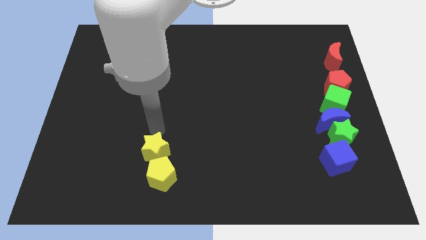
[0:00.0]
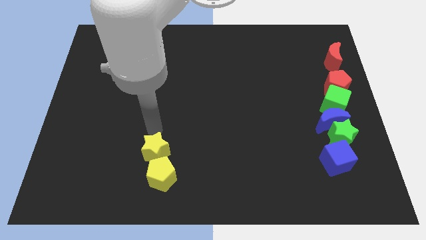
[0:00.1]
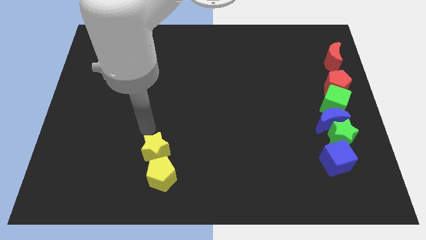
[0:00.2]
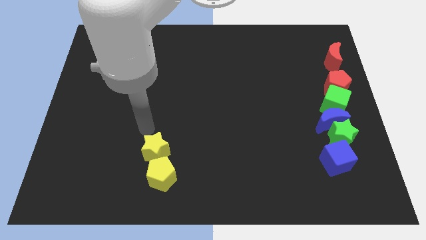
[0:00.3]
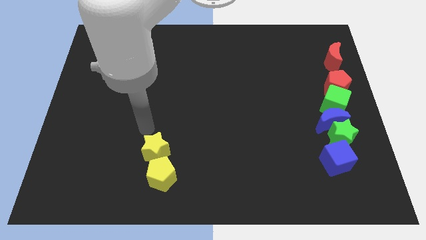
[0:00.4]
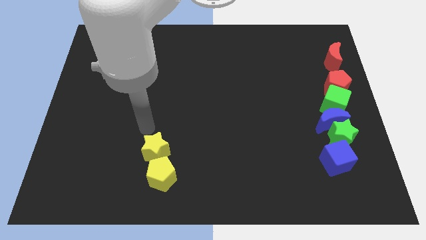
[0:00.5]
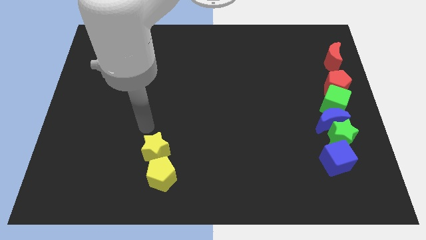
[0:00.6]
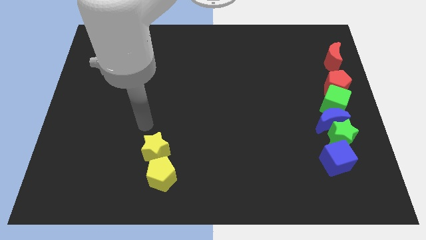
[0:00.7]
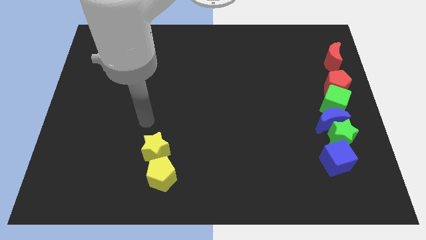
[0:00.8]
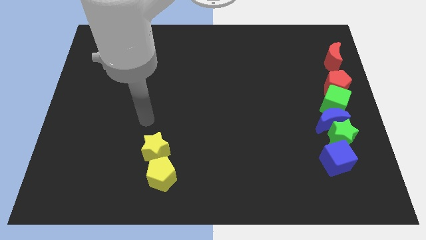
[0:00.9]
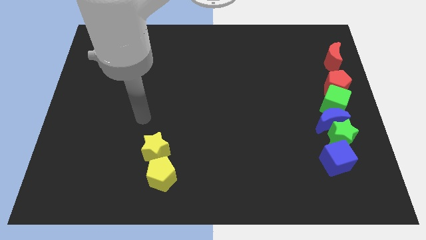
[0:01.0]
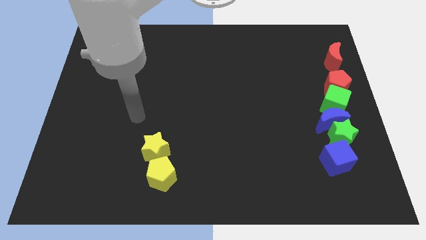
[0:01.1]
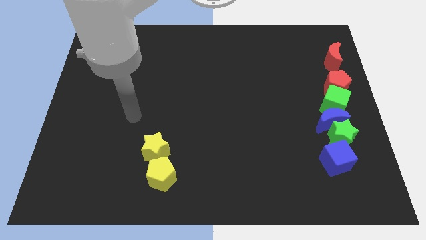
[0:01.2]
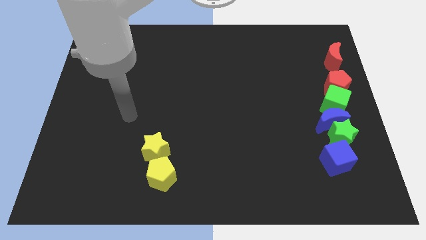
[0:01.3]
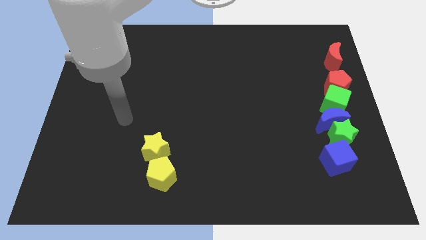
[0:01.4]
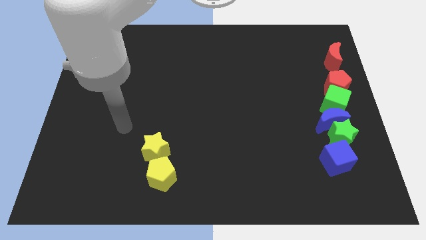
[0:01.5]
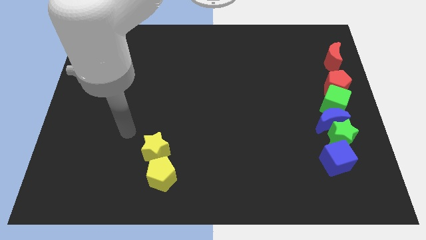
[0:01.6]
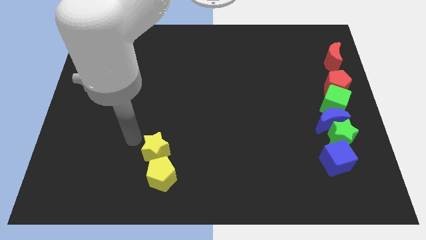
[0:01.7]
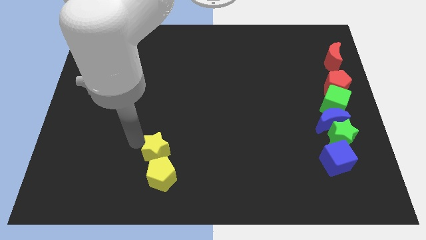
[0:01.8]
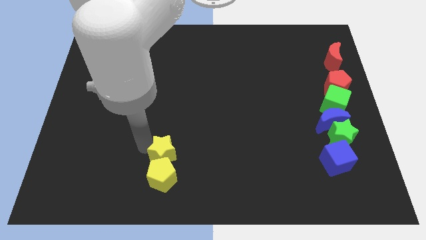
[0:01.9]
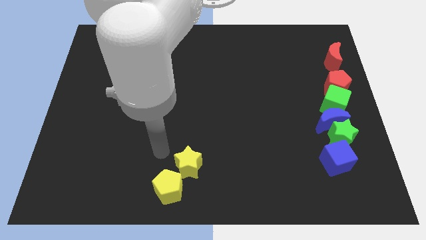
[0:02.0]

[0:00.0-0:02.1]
push the yellow blocks towards the bottom centre of the board

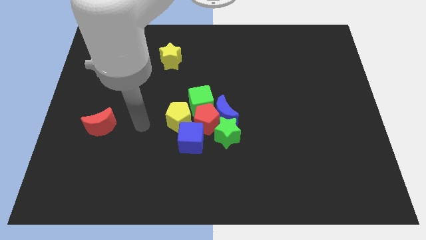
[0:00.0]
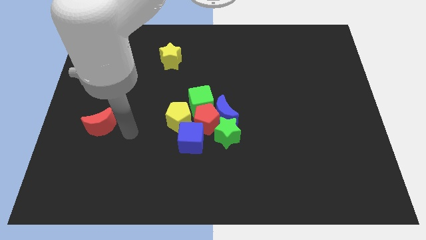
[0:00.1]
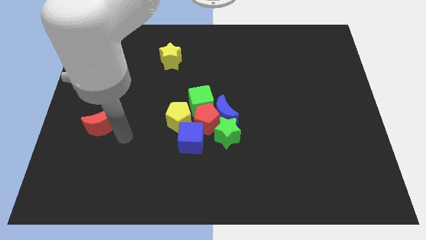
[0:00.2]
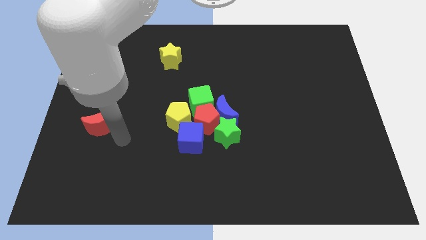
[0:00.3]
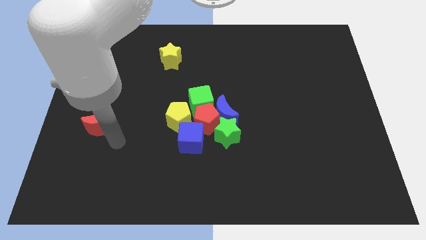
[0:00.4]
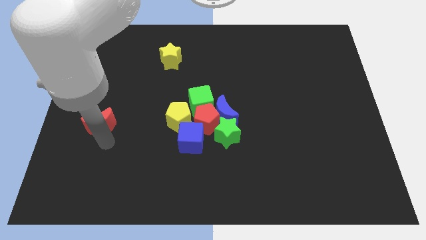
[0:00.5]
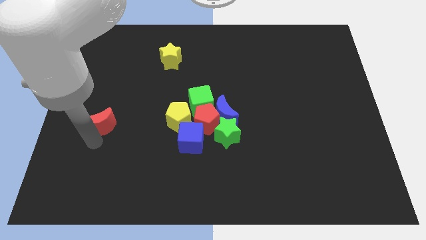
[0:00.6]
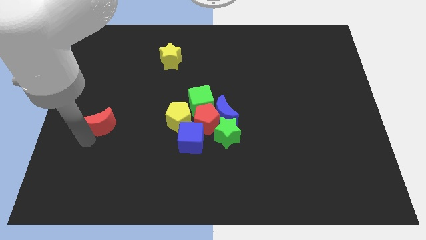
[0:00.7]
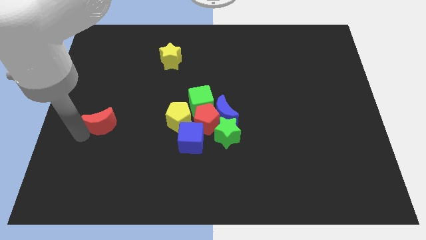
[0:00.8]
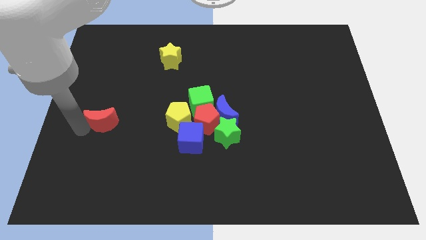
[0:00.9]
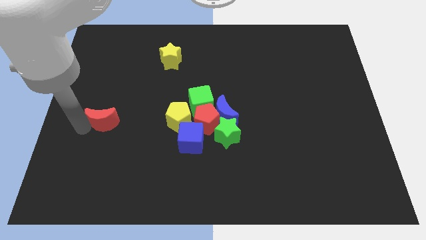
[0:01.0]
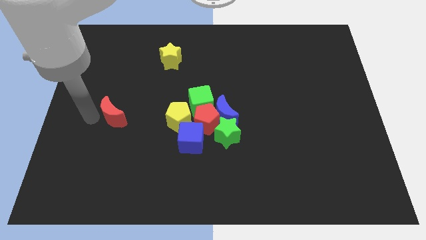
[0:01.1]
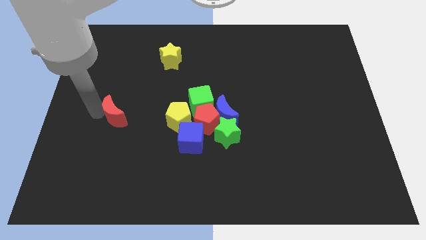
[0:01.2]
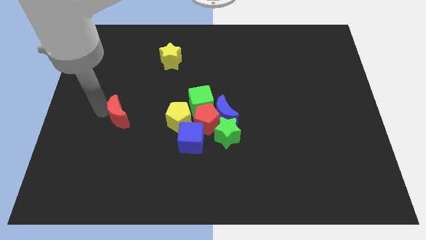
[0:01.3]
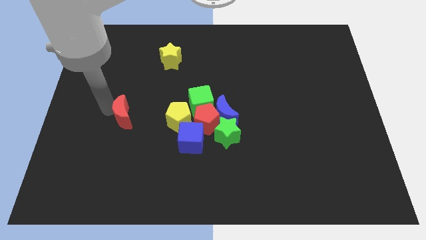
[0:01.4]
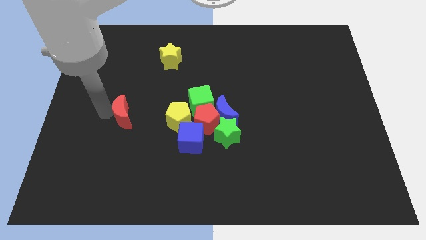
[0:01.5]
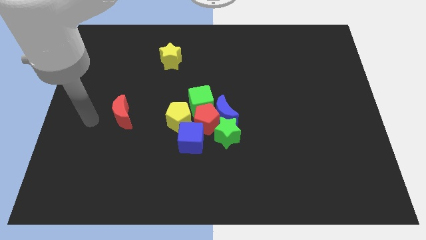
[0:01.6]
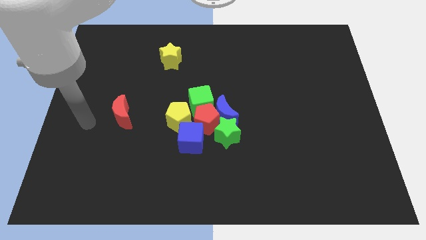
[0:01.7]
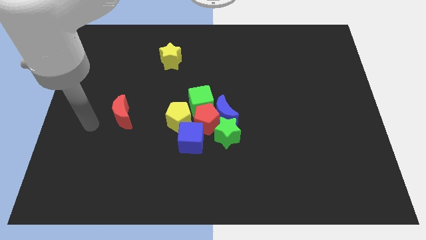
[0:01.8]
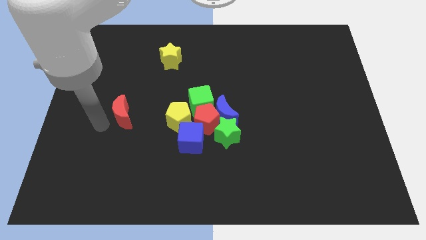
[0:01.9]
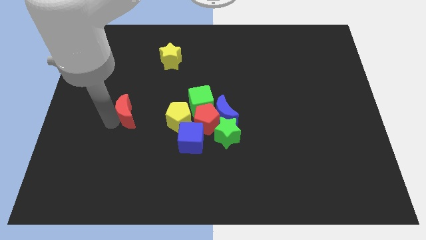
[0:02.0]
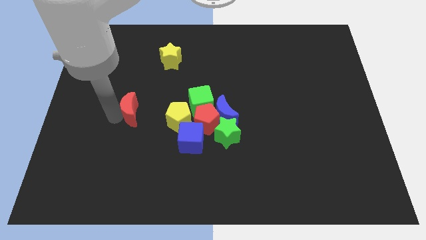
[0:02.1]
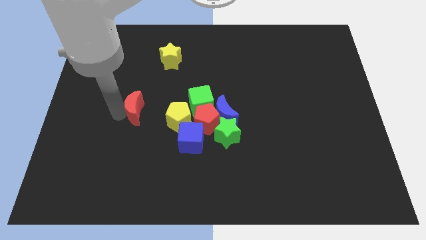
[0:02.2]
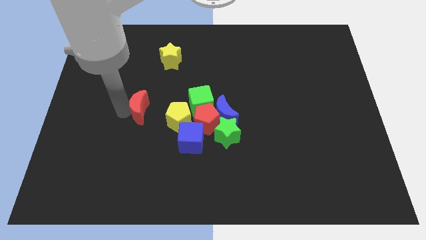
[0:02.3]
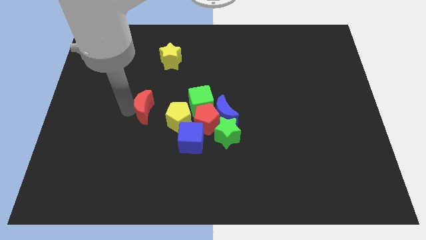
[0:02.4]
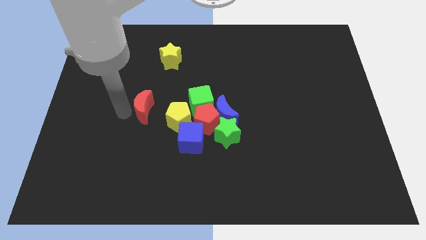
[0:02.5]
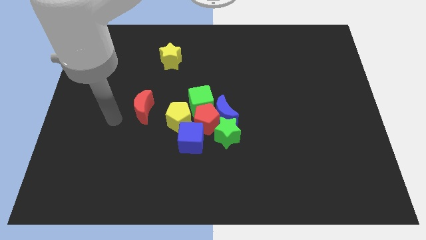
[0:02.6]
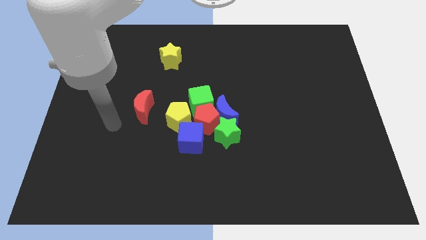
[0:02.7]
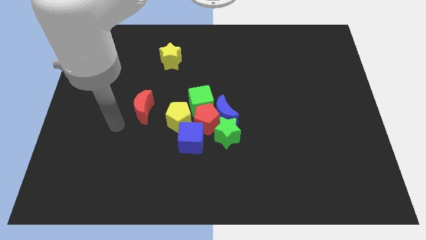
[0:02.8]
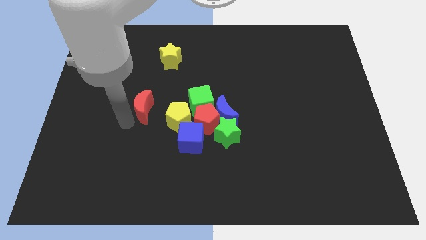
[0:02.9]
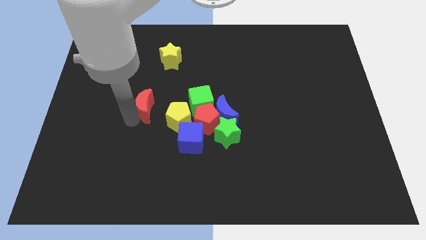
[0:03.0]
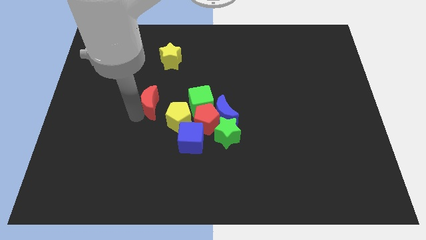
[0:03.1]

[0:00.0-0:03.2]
move the red crescent towards the left side of the yellow pentagon

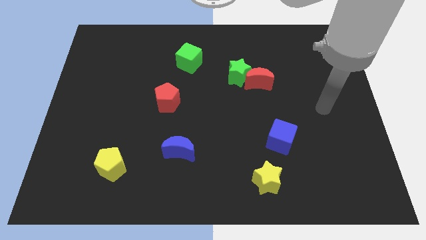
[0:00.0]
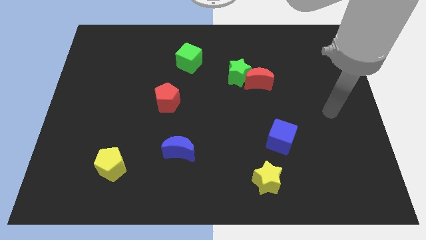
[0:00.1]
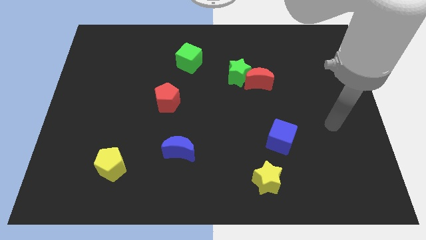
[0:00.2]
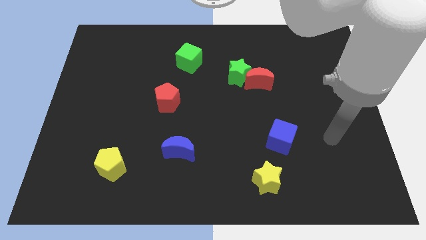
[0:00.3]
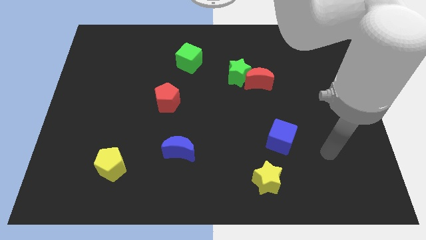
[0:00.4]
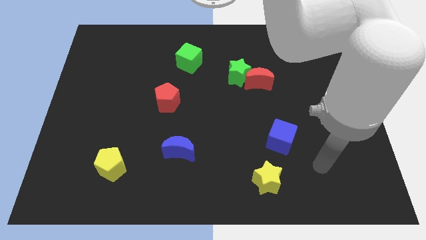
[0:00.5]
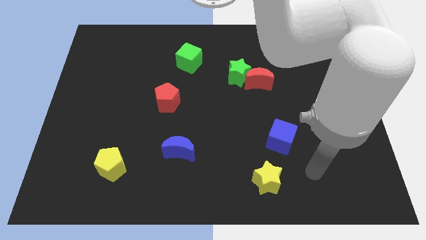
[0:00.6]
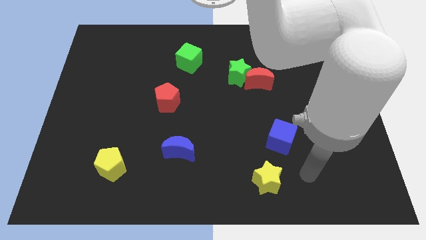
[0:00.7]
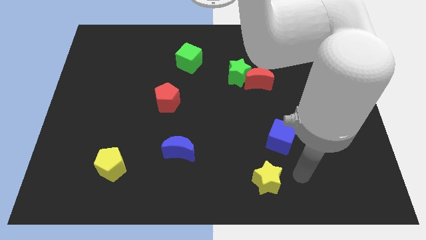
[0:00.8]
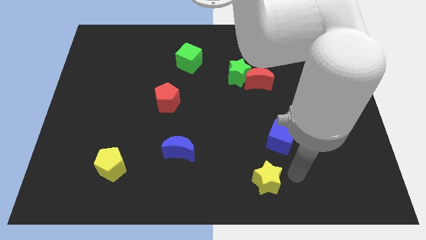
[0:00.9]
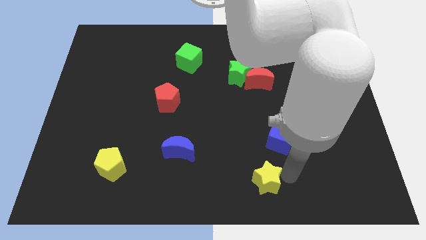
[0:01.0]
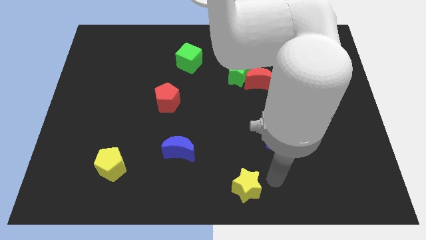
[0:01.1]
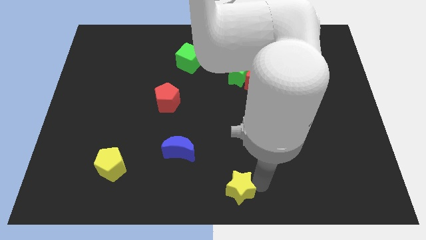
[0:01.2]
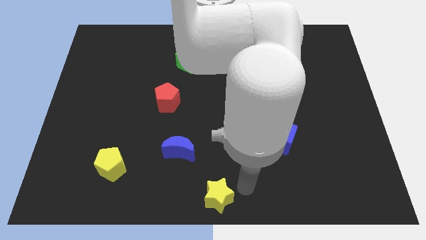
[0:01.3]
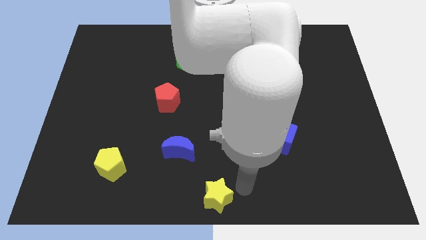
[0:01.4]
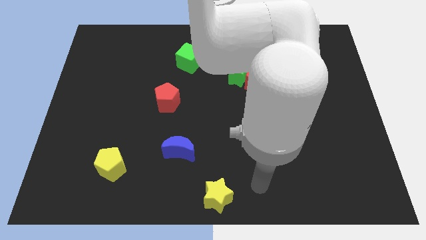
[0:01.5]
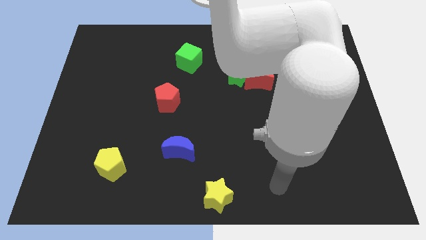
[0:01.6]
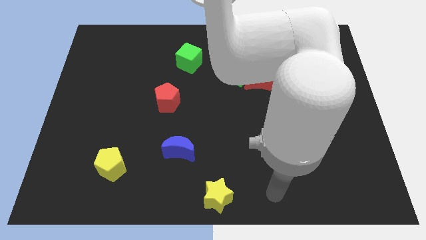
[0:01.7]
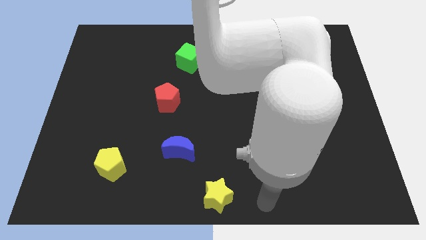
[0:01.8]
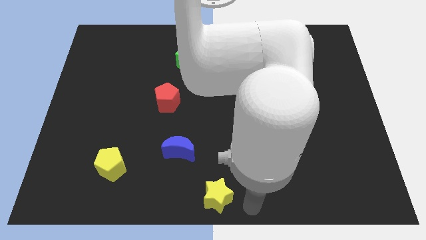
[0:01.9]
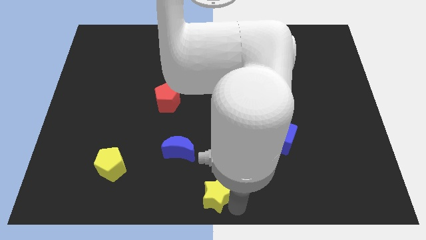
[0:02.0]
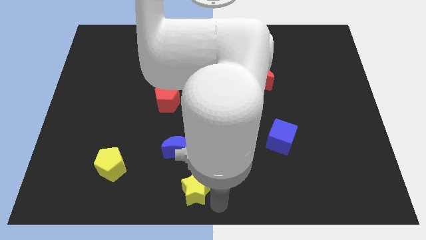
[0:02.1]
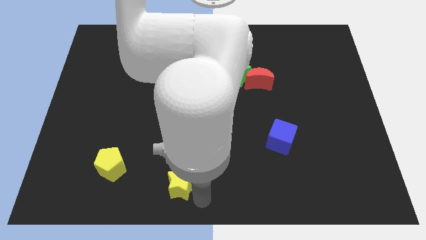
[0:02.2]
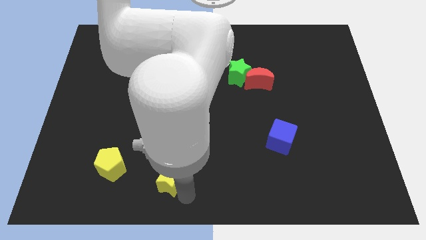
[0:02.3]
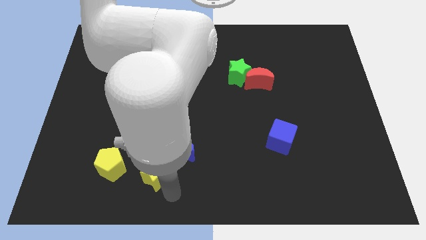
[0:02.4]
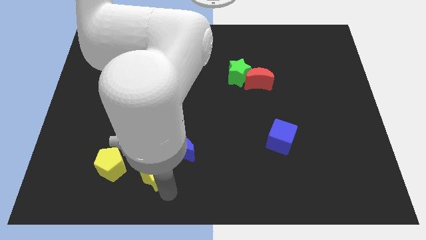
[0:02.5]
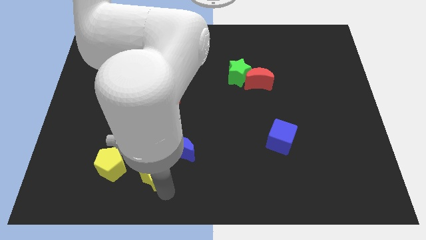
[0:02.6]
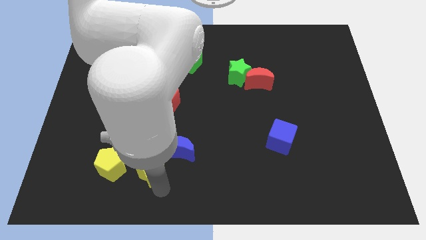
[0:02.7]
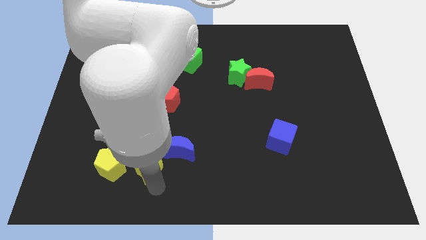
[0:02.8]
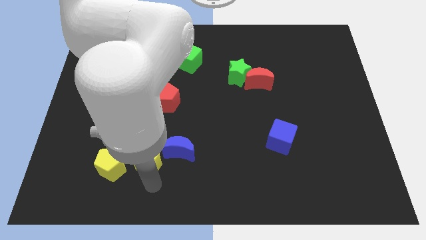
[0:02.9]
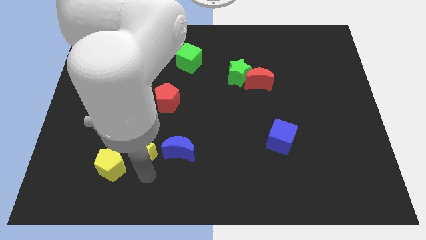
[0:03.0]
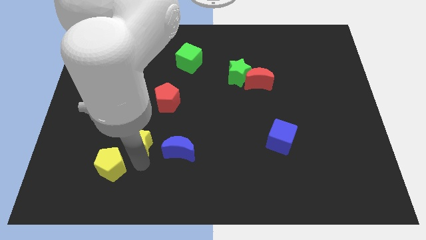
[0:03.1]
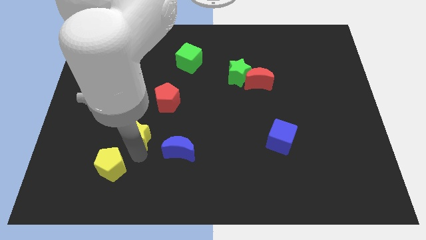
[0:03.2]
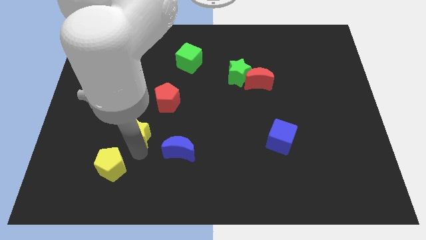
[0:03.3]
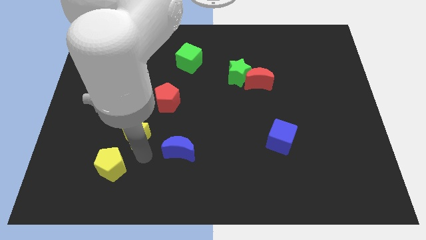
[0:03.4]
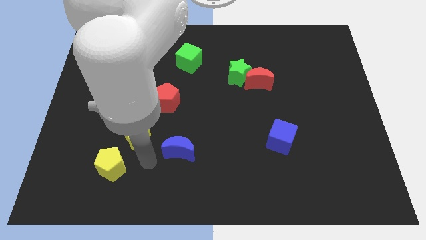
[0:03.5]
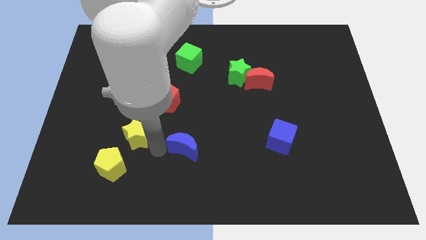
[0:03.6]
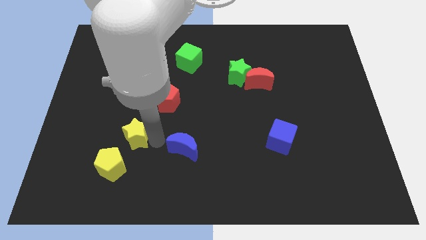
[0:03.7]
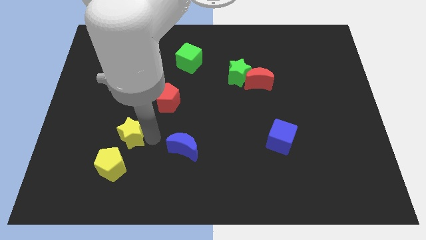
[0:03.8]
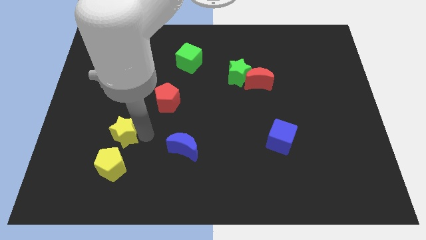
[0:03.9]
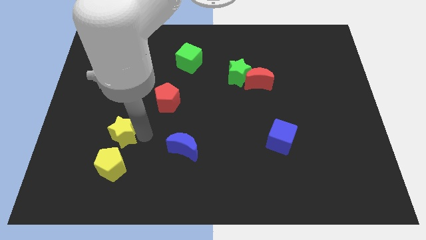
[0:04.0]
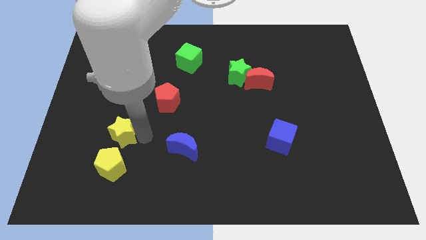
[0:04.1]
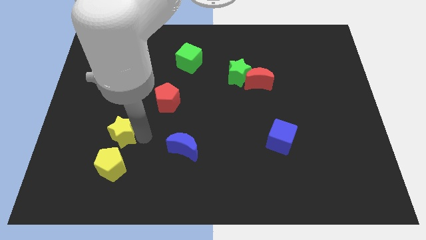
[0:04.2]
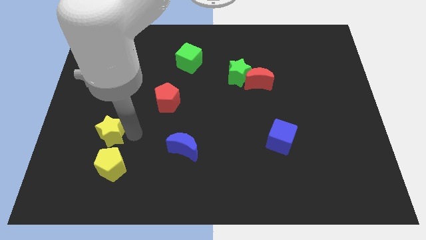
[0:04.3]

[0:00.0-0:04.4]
push the yellow star to the top of the yellow pentagon
